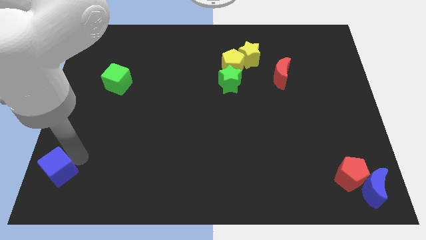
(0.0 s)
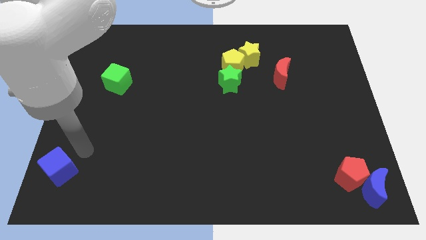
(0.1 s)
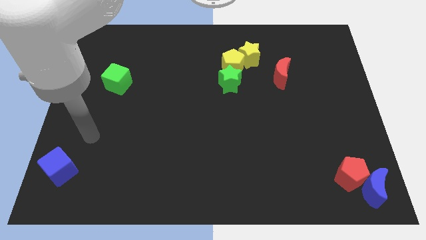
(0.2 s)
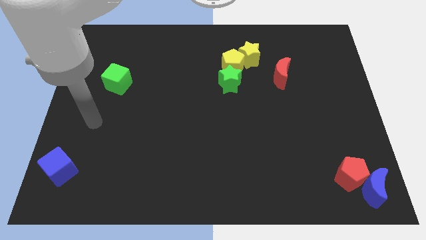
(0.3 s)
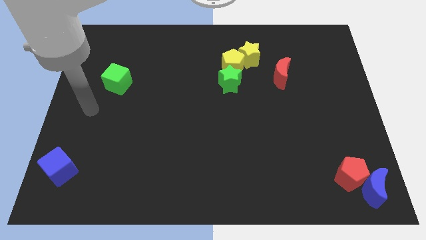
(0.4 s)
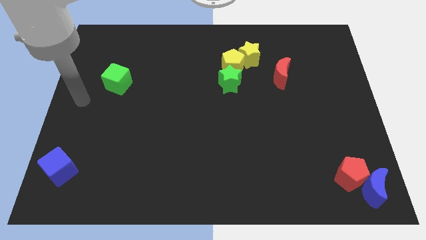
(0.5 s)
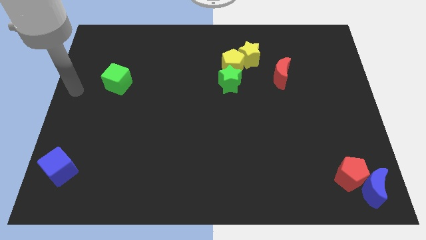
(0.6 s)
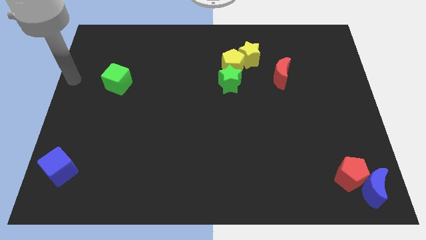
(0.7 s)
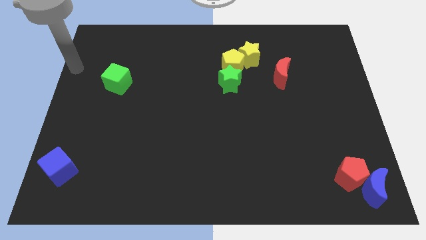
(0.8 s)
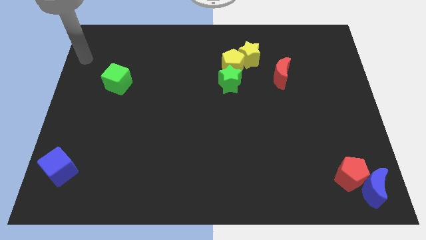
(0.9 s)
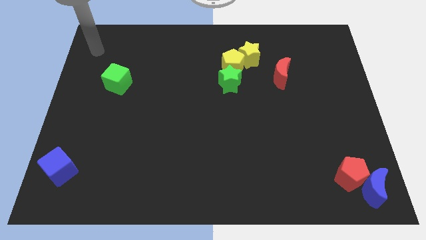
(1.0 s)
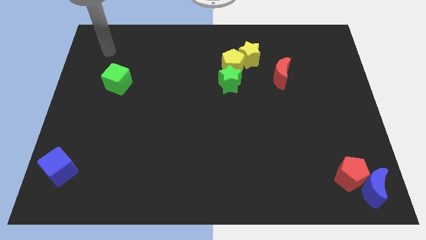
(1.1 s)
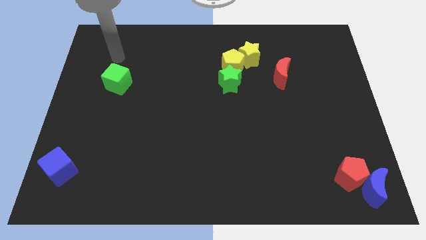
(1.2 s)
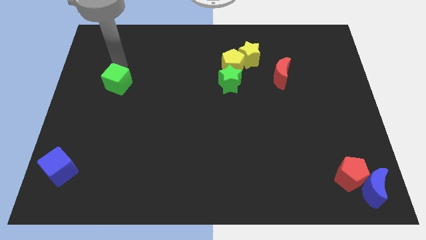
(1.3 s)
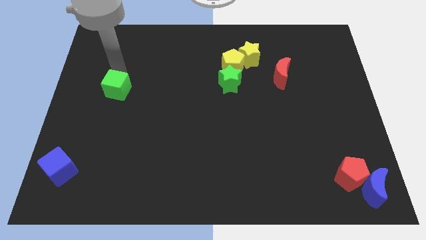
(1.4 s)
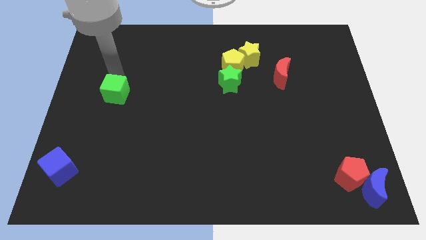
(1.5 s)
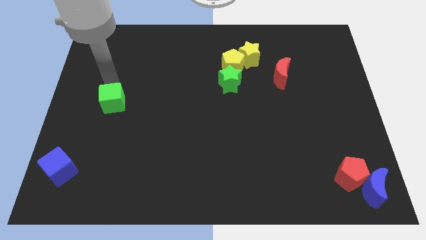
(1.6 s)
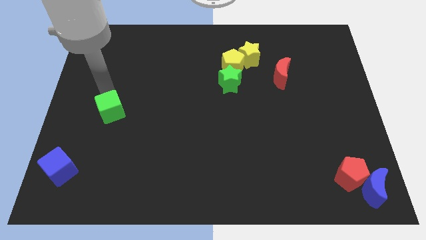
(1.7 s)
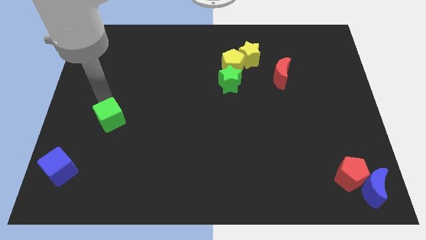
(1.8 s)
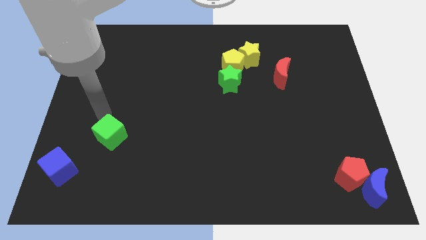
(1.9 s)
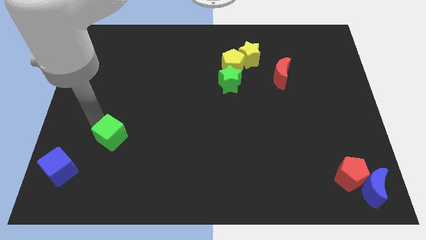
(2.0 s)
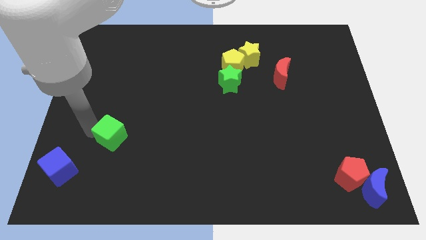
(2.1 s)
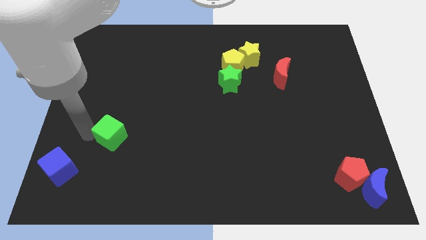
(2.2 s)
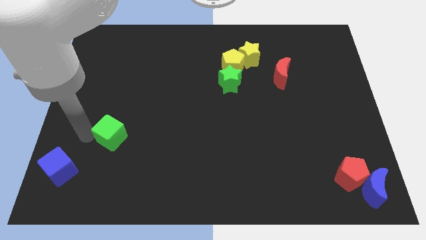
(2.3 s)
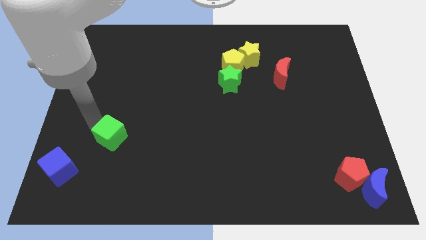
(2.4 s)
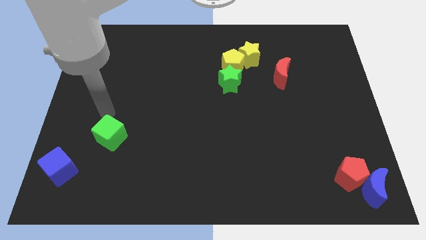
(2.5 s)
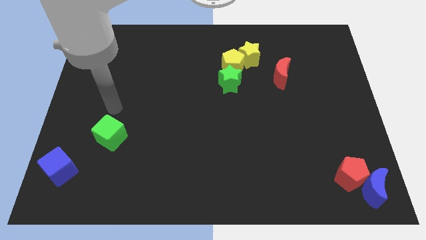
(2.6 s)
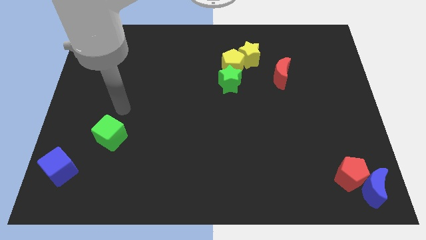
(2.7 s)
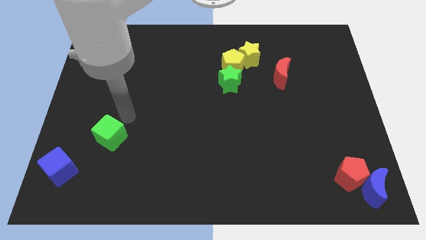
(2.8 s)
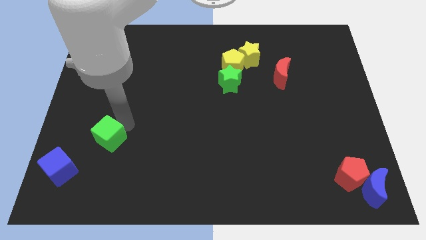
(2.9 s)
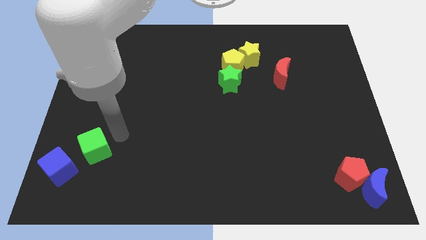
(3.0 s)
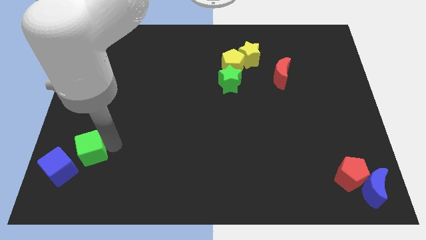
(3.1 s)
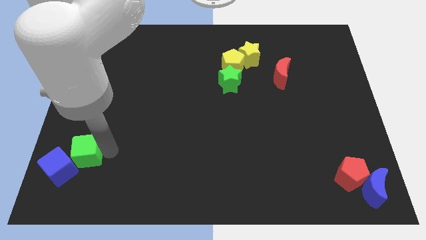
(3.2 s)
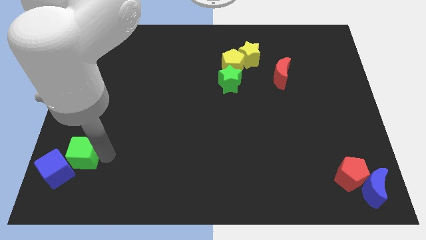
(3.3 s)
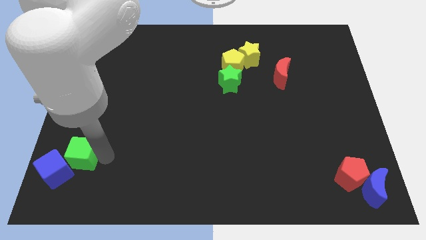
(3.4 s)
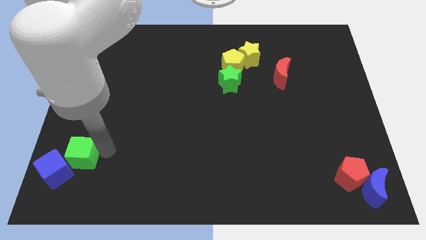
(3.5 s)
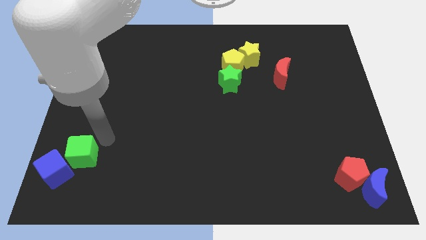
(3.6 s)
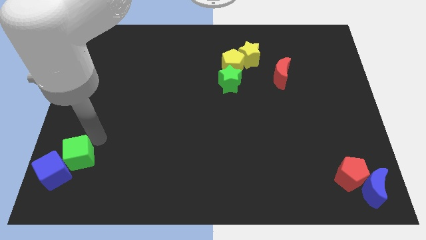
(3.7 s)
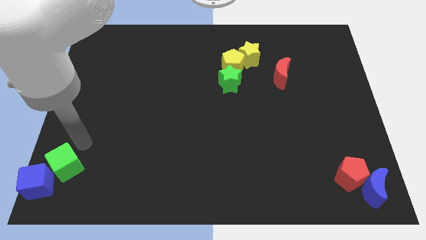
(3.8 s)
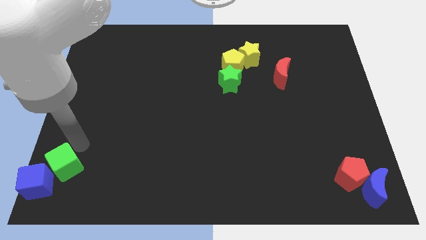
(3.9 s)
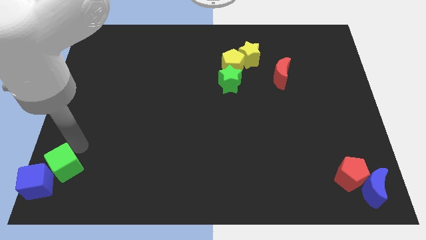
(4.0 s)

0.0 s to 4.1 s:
move the green cube into the blue cube

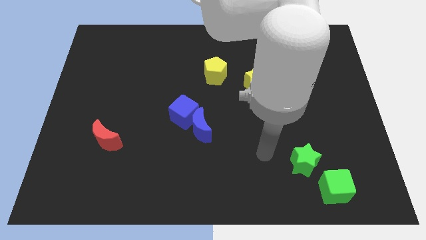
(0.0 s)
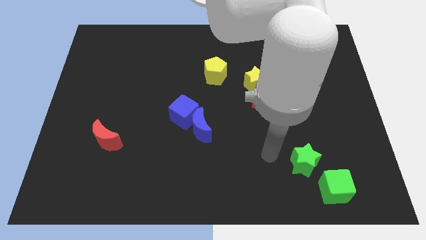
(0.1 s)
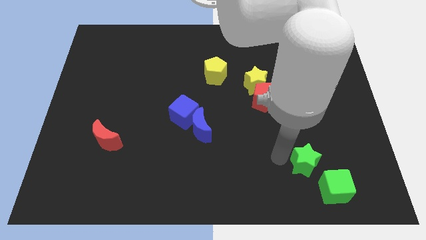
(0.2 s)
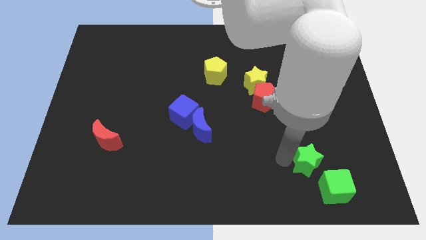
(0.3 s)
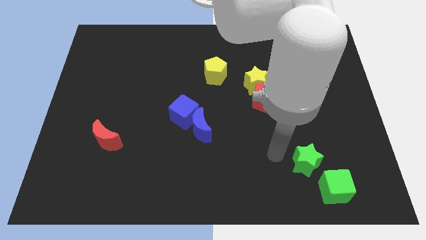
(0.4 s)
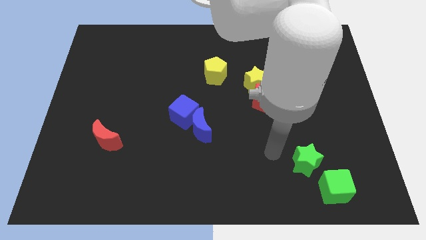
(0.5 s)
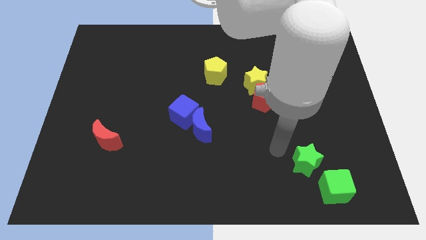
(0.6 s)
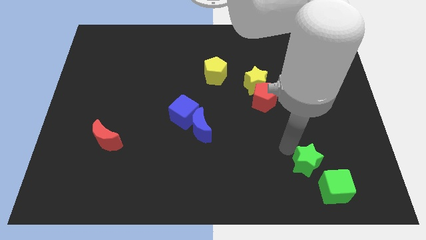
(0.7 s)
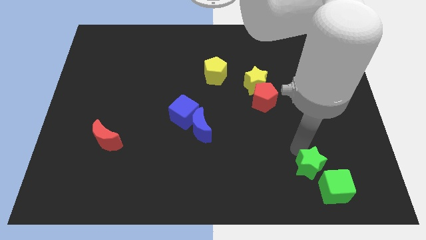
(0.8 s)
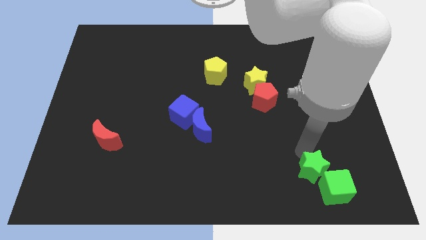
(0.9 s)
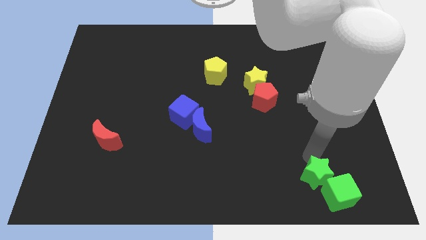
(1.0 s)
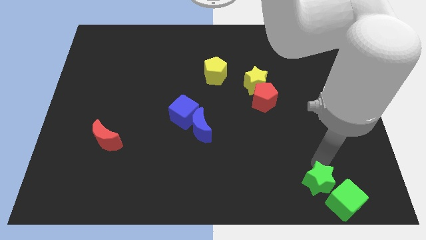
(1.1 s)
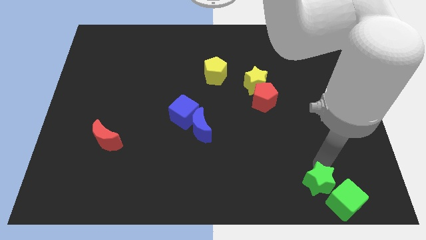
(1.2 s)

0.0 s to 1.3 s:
push the green star into the green cube

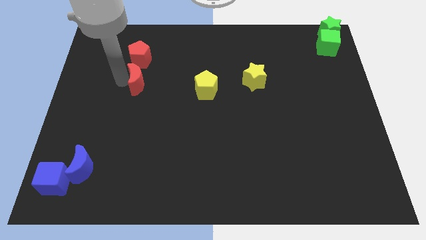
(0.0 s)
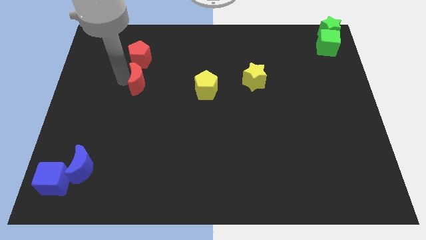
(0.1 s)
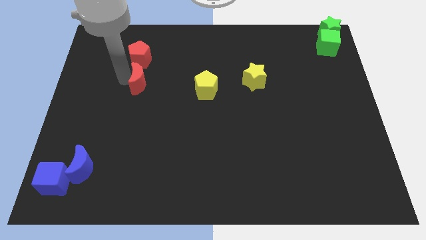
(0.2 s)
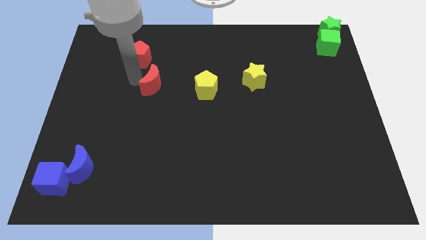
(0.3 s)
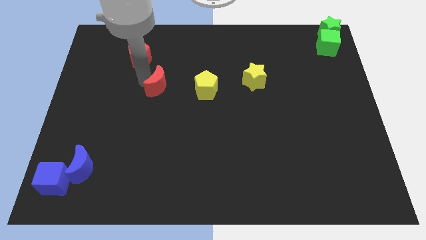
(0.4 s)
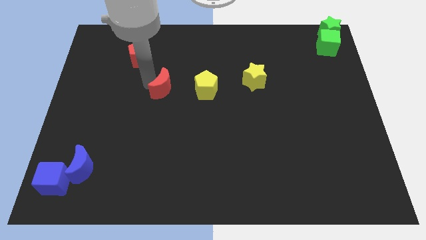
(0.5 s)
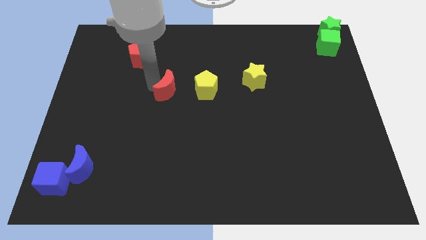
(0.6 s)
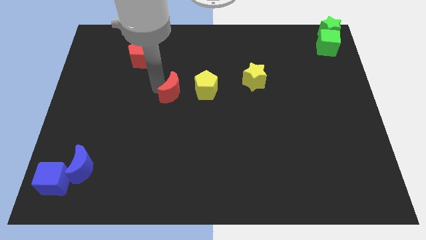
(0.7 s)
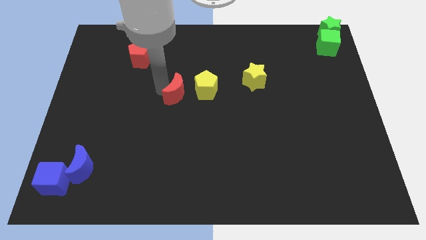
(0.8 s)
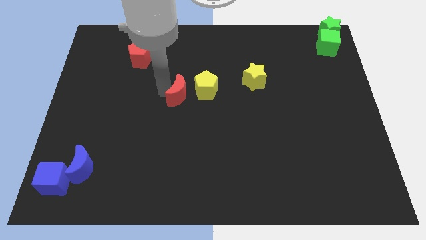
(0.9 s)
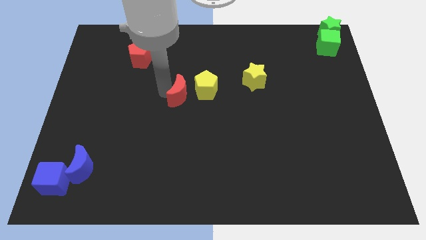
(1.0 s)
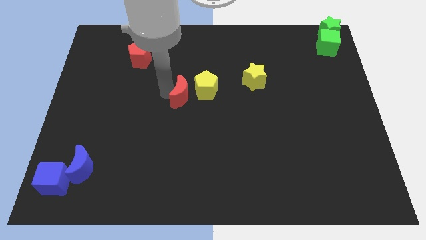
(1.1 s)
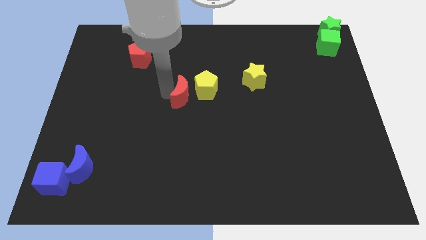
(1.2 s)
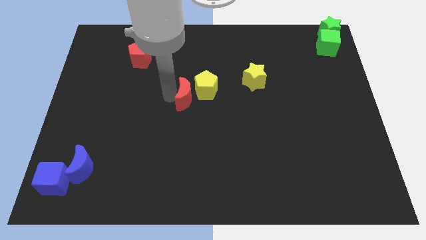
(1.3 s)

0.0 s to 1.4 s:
push the red crescent into the yellow pentagon

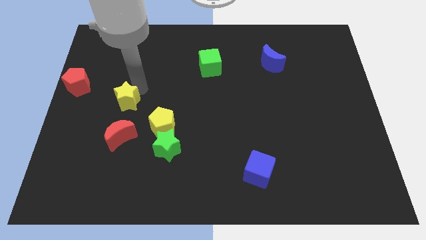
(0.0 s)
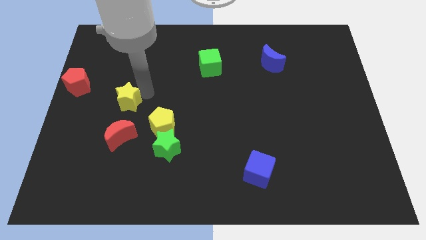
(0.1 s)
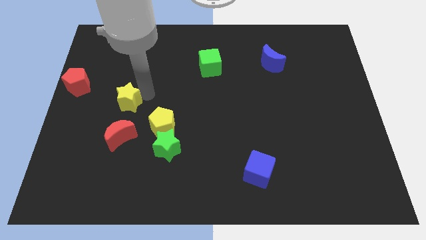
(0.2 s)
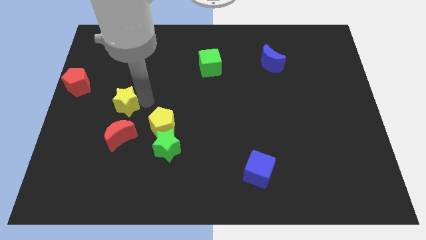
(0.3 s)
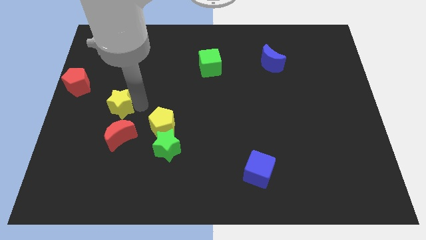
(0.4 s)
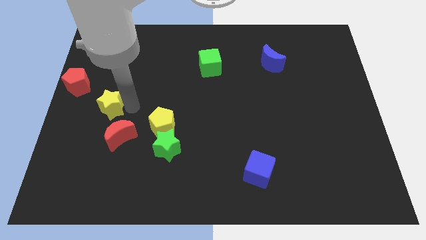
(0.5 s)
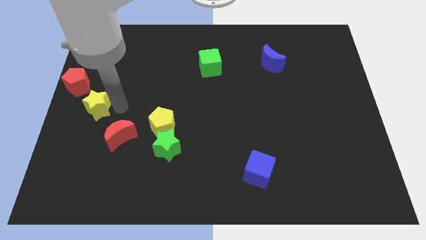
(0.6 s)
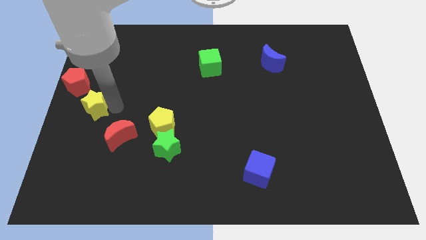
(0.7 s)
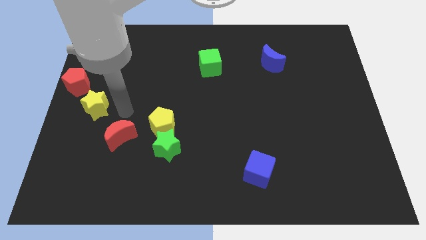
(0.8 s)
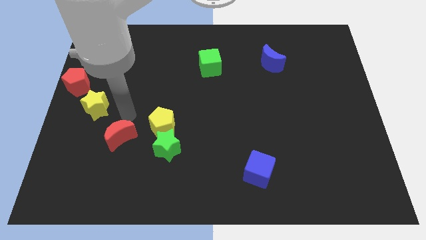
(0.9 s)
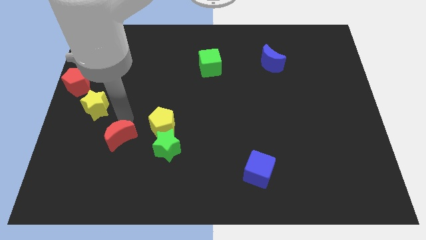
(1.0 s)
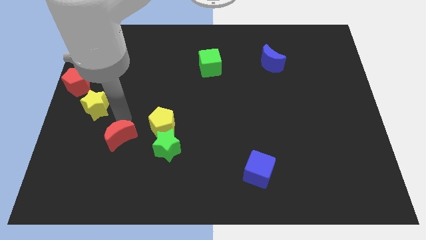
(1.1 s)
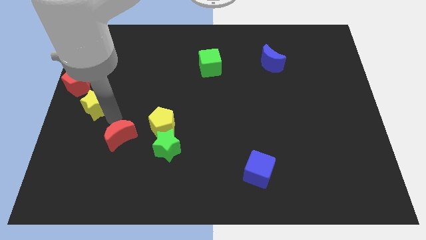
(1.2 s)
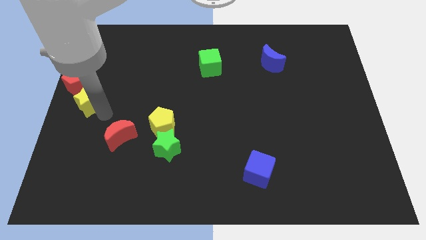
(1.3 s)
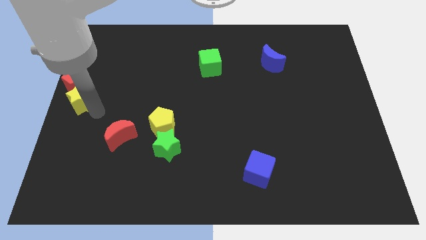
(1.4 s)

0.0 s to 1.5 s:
move the yellow star diagonally to the red pentagon

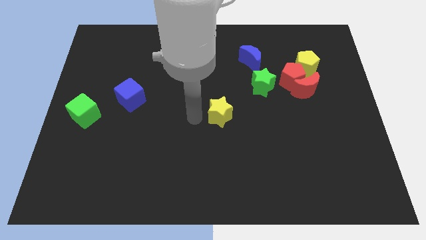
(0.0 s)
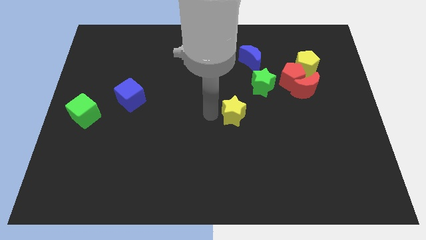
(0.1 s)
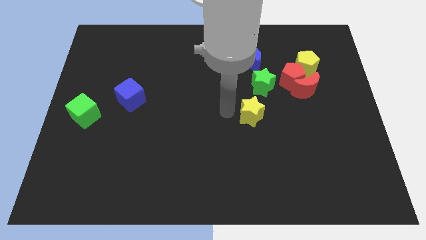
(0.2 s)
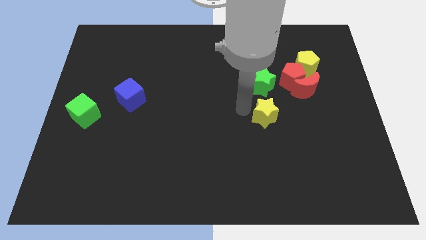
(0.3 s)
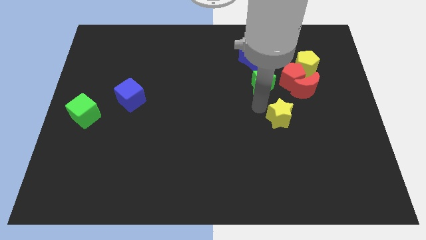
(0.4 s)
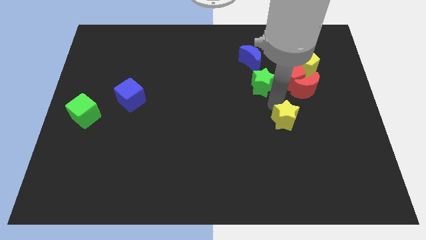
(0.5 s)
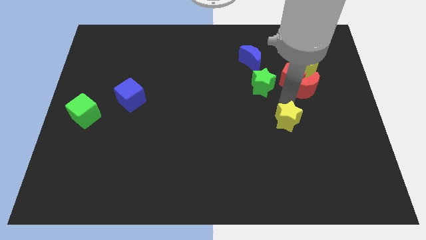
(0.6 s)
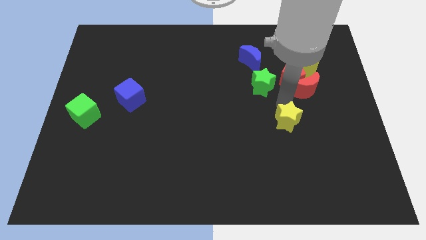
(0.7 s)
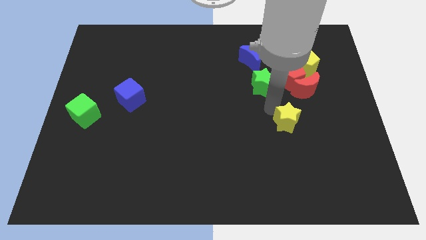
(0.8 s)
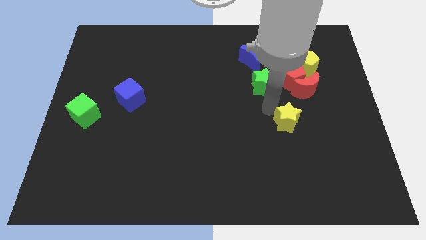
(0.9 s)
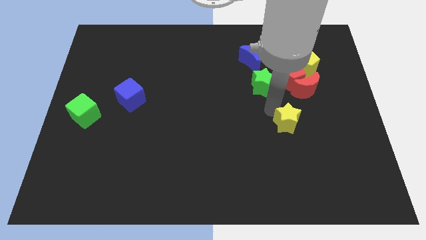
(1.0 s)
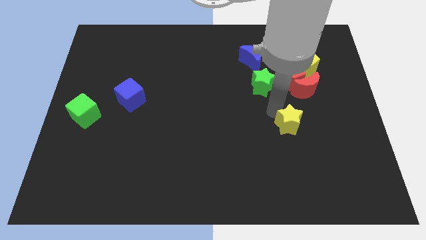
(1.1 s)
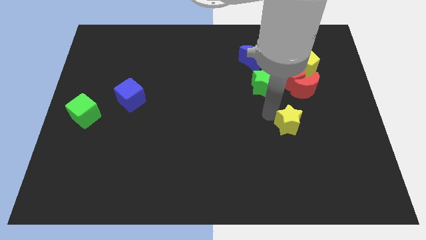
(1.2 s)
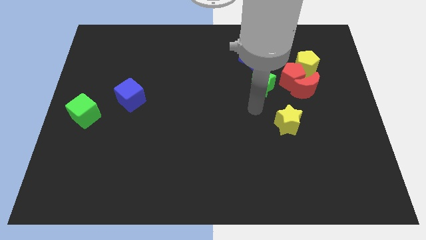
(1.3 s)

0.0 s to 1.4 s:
move the yellow star to the bottom right of the green star
